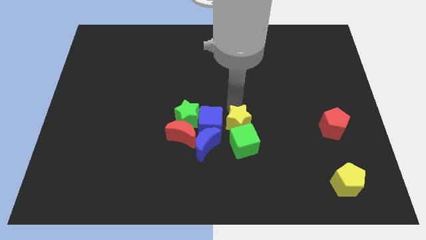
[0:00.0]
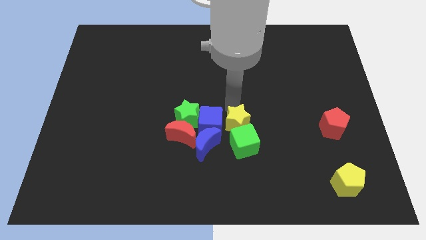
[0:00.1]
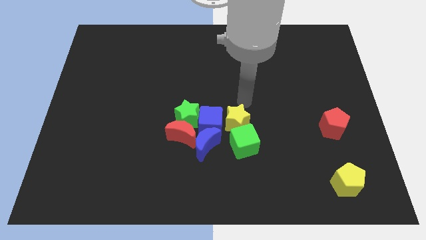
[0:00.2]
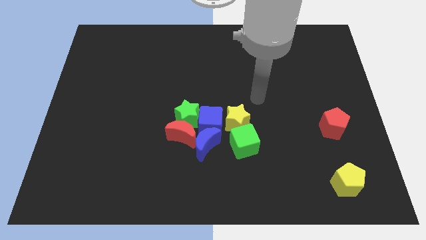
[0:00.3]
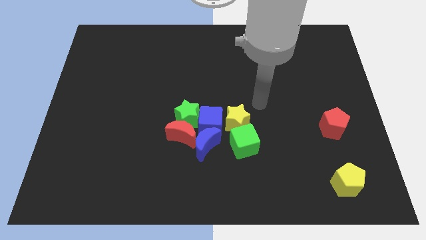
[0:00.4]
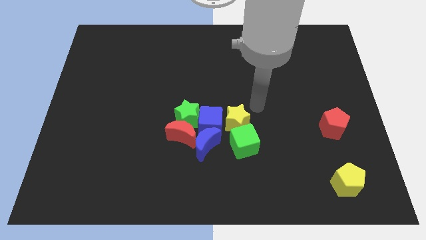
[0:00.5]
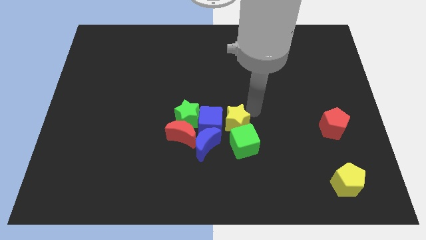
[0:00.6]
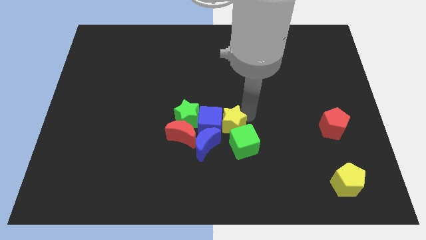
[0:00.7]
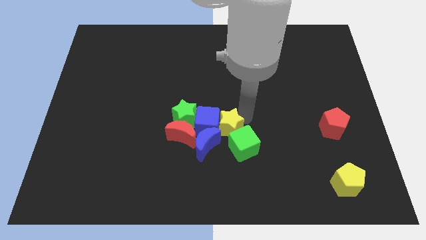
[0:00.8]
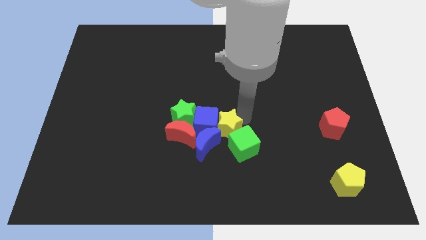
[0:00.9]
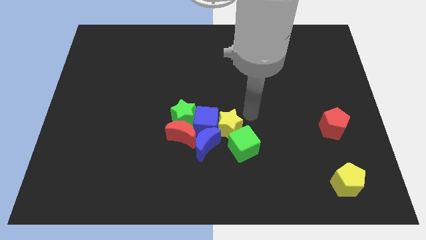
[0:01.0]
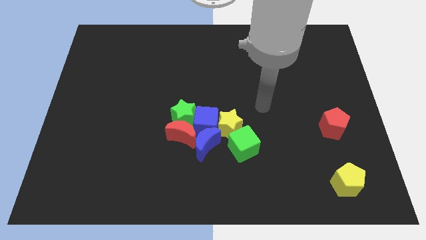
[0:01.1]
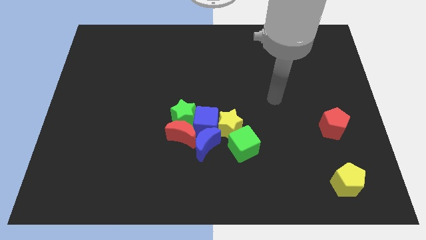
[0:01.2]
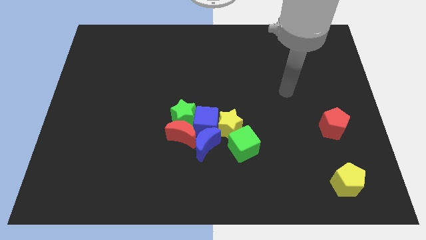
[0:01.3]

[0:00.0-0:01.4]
move the group of blocks

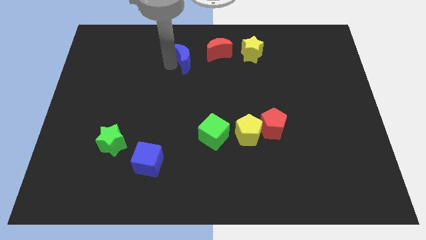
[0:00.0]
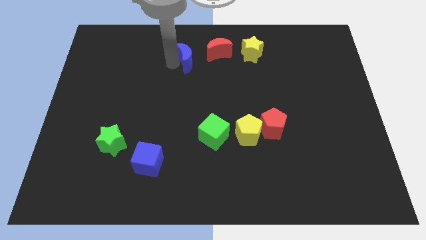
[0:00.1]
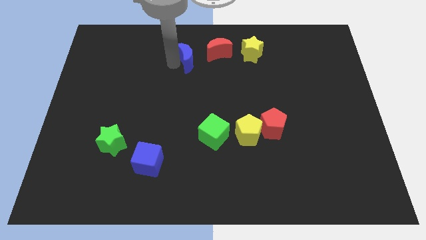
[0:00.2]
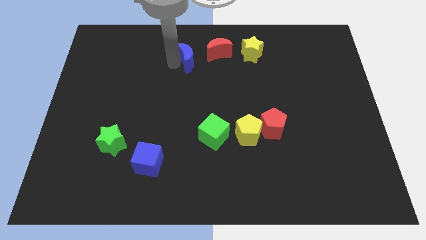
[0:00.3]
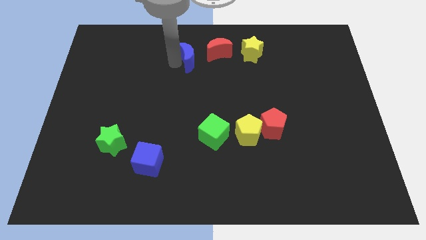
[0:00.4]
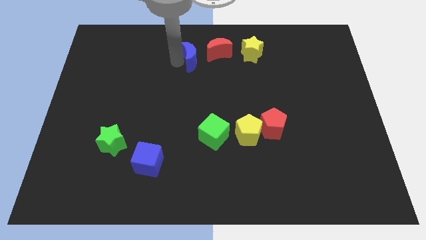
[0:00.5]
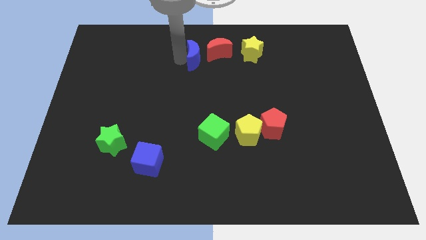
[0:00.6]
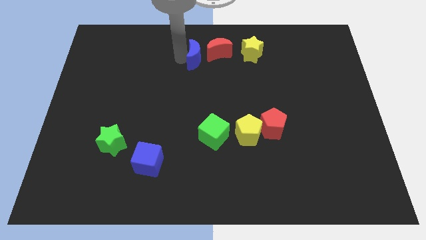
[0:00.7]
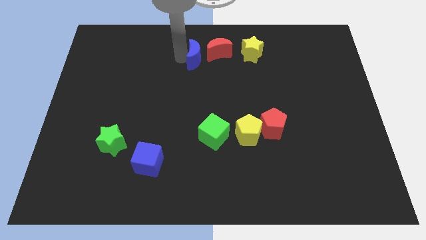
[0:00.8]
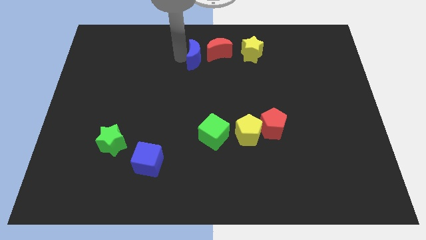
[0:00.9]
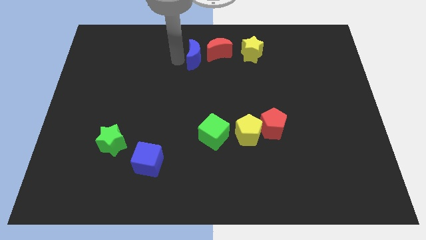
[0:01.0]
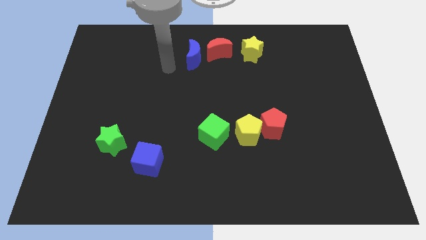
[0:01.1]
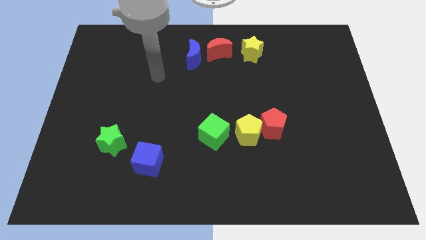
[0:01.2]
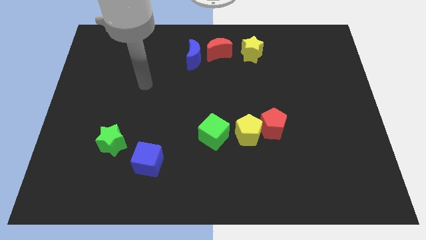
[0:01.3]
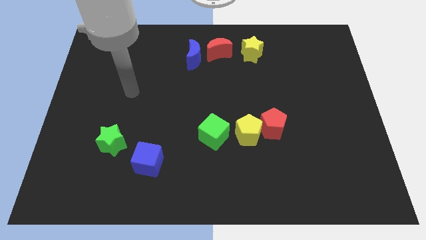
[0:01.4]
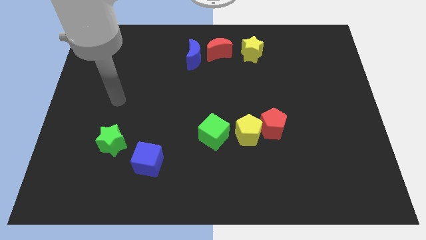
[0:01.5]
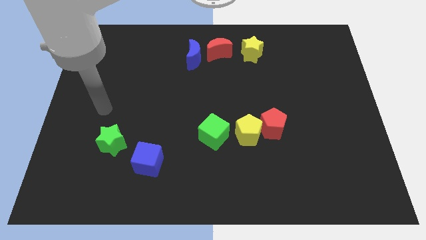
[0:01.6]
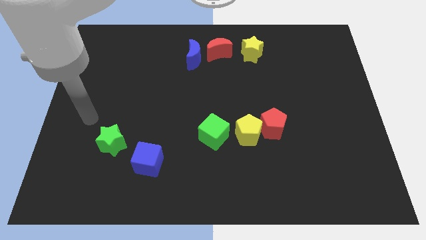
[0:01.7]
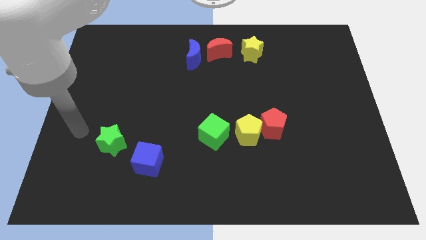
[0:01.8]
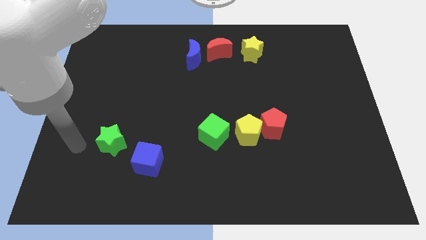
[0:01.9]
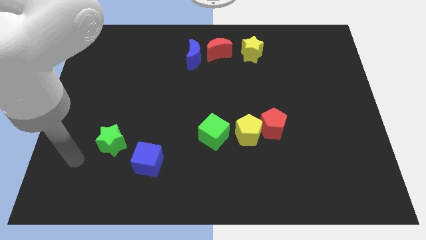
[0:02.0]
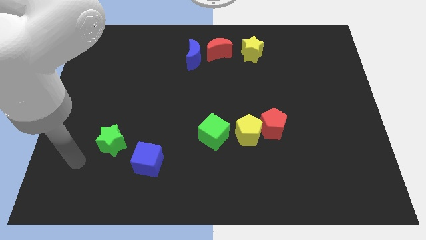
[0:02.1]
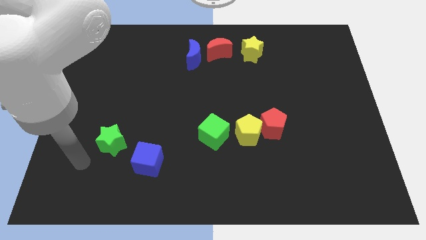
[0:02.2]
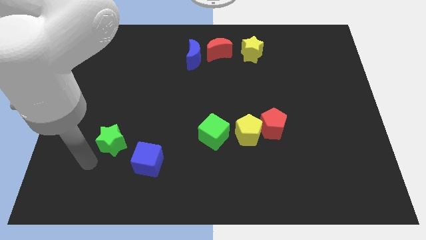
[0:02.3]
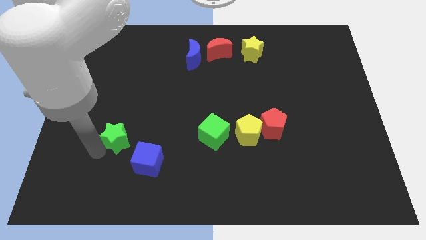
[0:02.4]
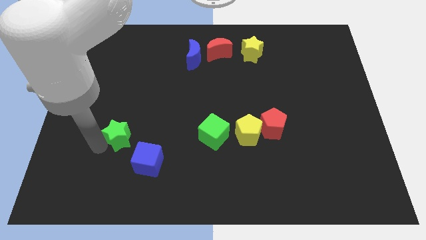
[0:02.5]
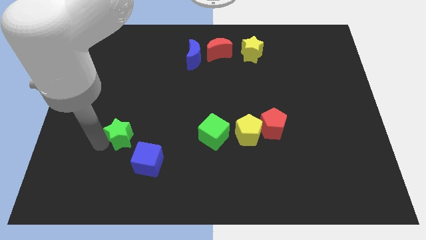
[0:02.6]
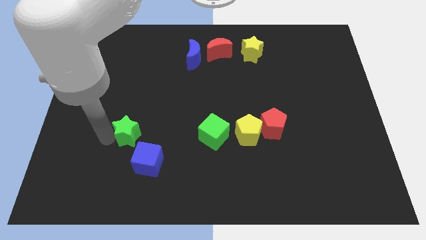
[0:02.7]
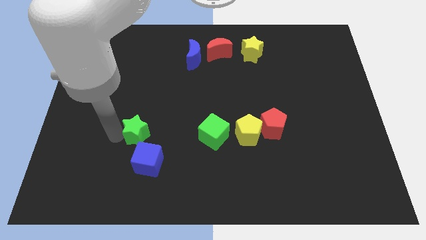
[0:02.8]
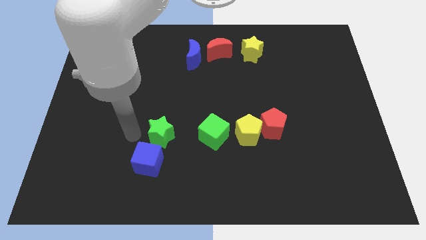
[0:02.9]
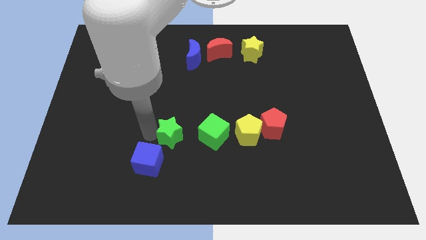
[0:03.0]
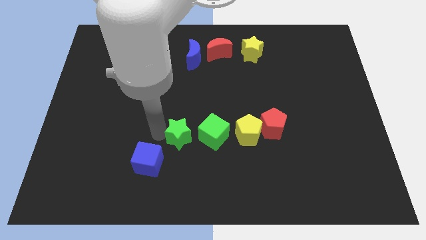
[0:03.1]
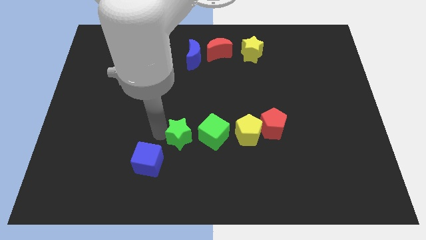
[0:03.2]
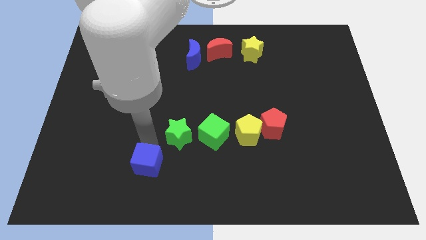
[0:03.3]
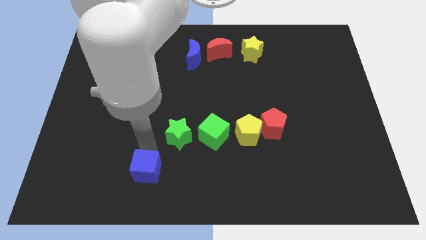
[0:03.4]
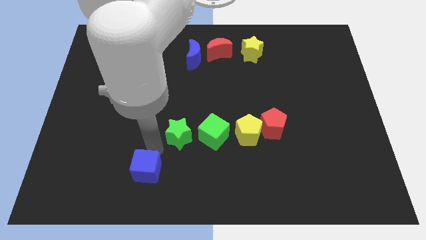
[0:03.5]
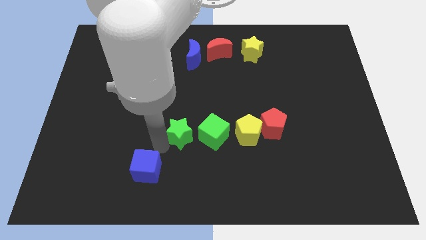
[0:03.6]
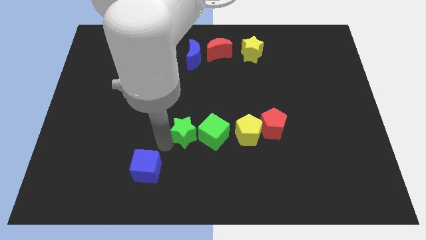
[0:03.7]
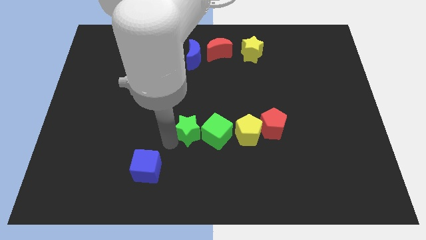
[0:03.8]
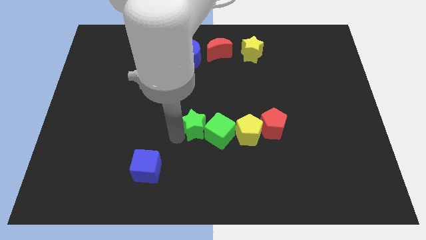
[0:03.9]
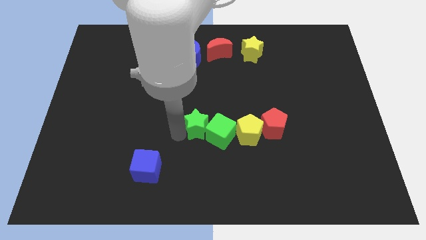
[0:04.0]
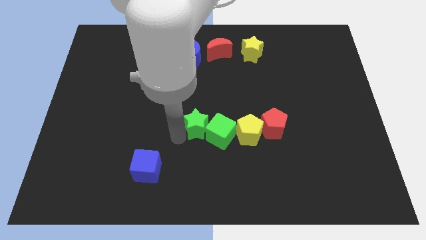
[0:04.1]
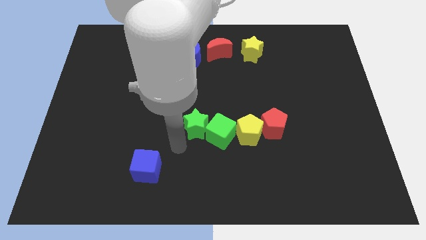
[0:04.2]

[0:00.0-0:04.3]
push the green star into the green cube

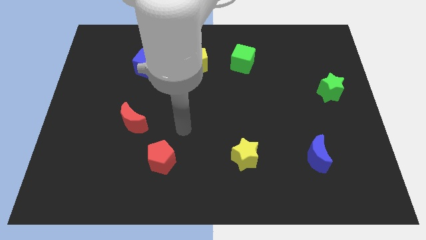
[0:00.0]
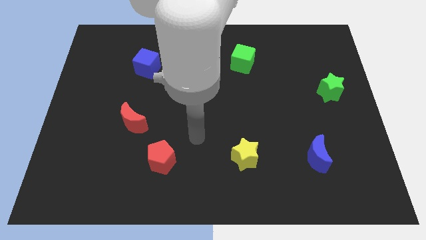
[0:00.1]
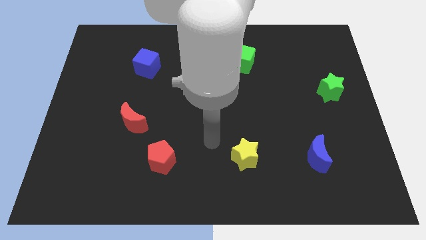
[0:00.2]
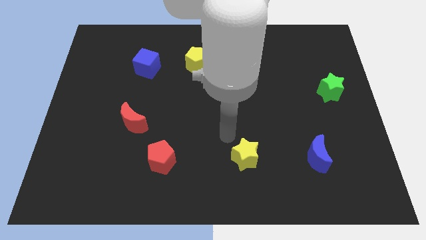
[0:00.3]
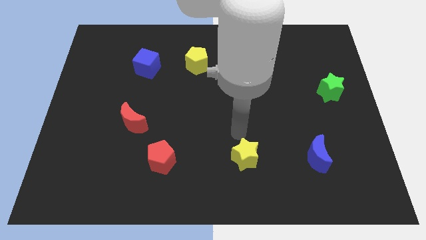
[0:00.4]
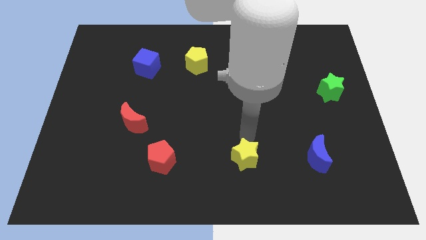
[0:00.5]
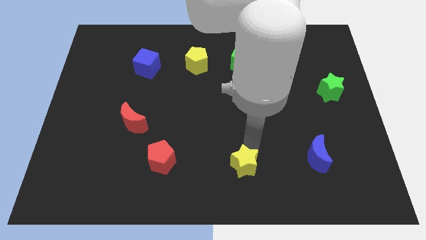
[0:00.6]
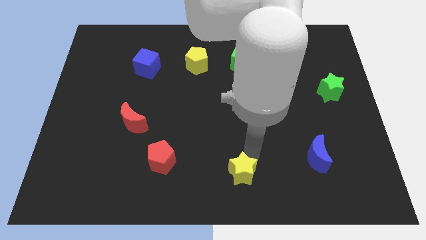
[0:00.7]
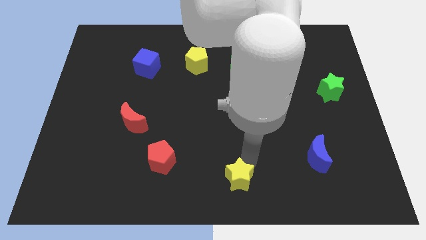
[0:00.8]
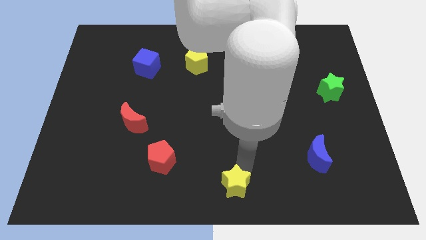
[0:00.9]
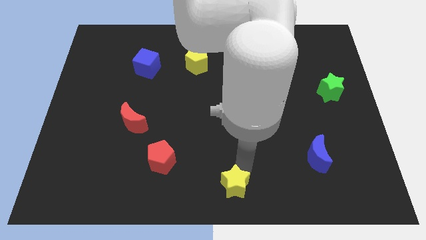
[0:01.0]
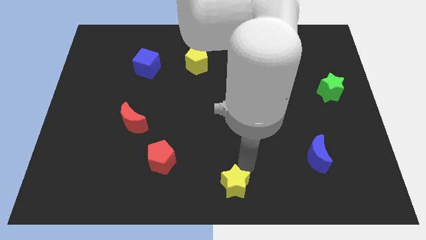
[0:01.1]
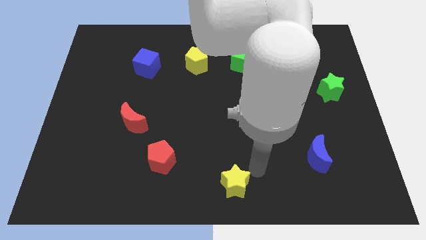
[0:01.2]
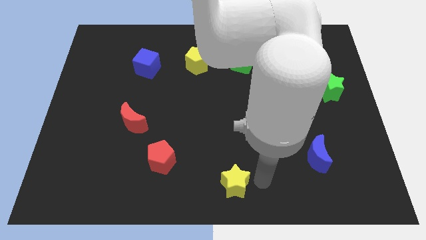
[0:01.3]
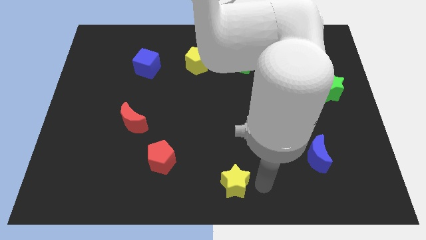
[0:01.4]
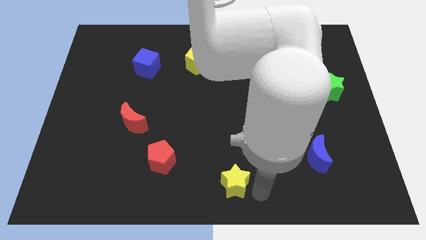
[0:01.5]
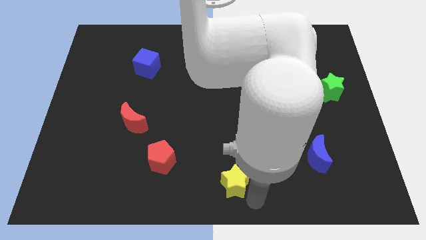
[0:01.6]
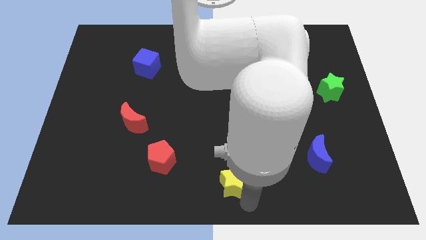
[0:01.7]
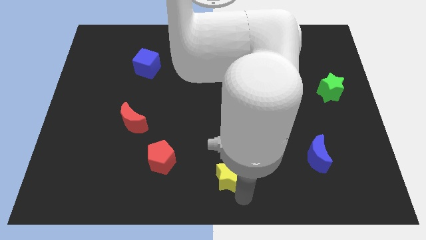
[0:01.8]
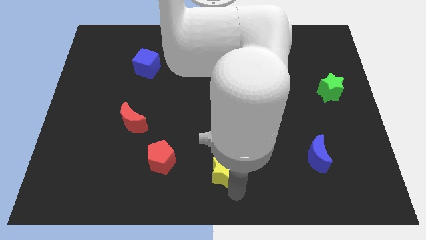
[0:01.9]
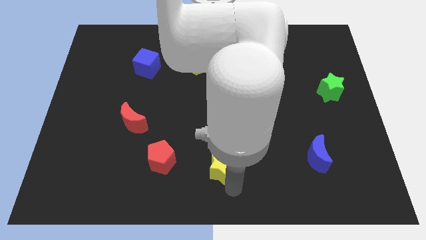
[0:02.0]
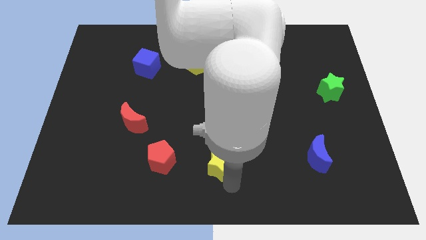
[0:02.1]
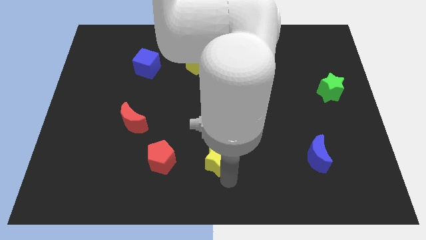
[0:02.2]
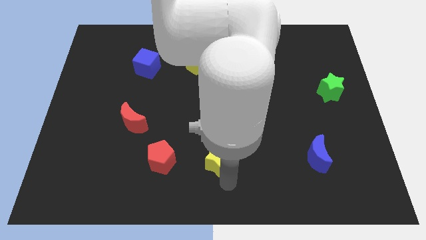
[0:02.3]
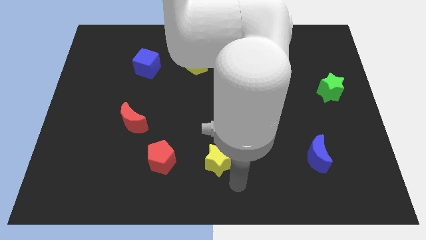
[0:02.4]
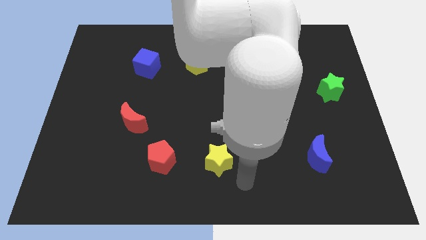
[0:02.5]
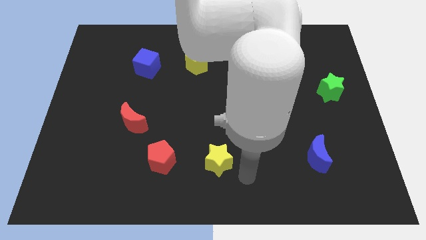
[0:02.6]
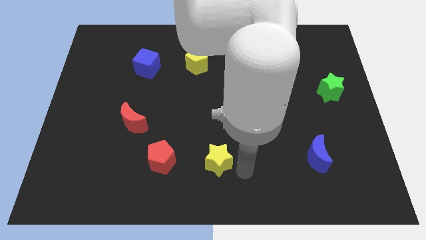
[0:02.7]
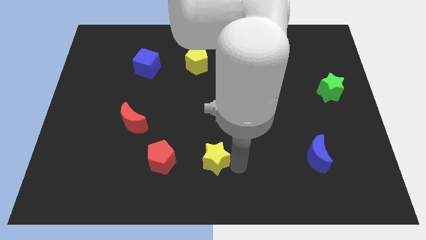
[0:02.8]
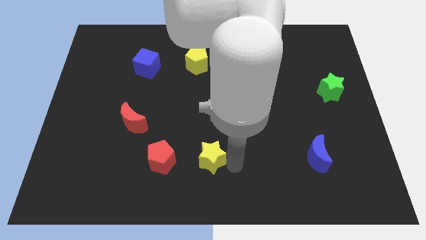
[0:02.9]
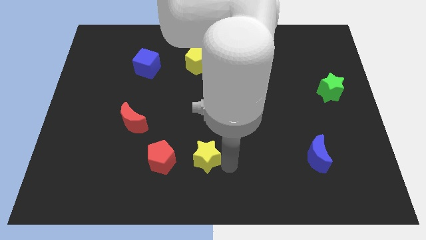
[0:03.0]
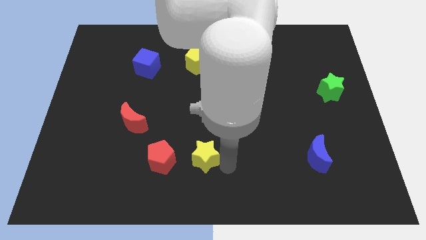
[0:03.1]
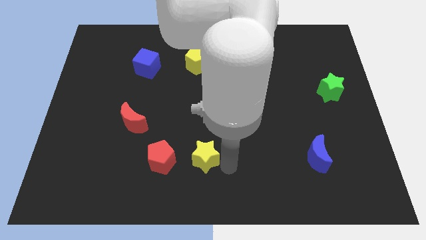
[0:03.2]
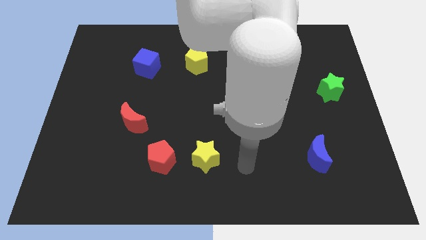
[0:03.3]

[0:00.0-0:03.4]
push the yellow star downward
